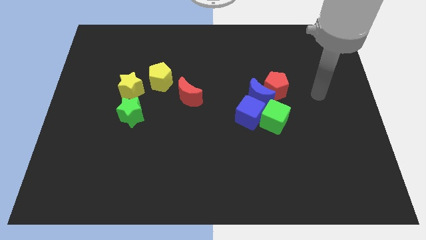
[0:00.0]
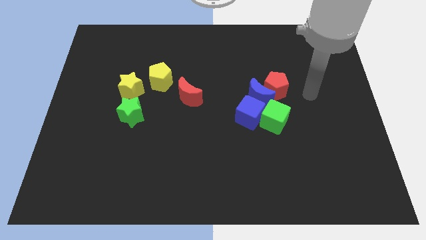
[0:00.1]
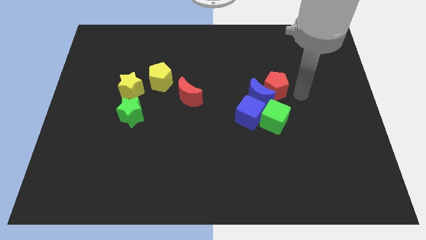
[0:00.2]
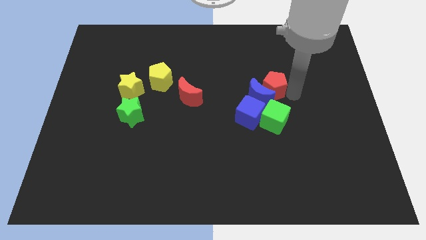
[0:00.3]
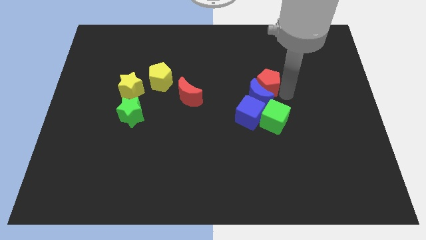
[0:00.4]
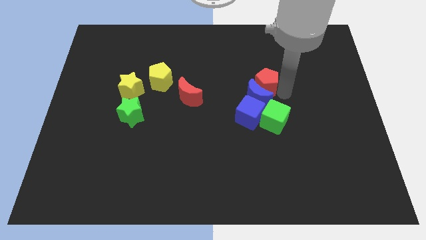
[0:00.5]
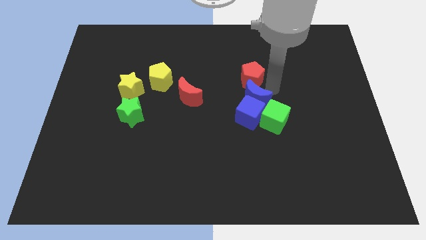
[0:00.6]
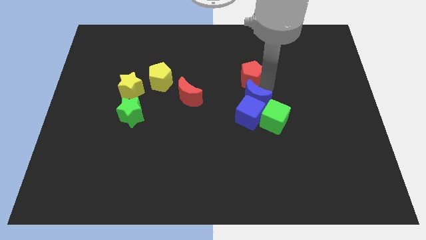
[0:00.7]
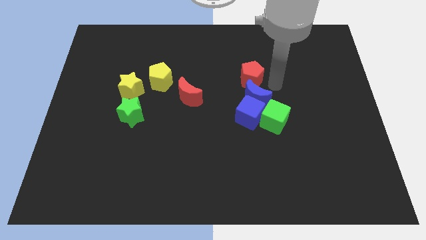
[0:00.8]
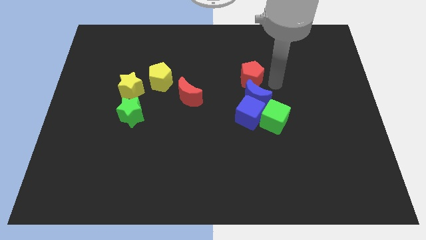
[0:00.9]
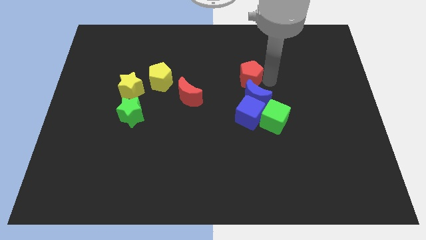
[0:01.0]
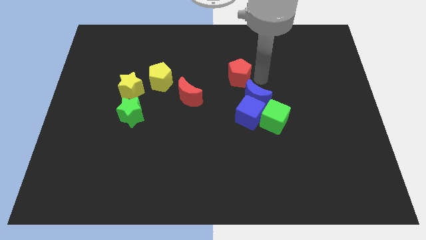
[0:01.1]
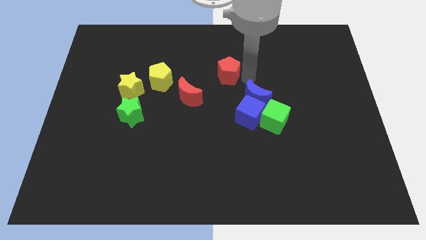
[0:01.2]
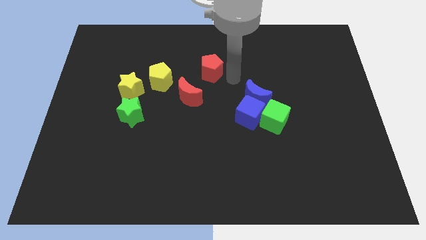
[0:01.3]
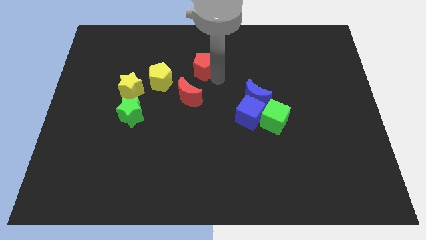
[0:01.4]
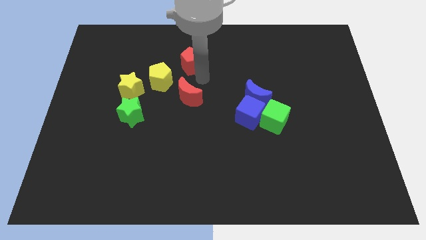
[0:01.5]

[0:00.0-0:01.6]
put the red pentagon above the red moon

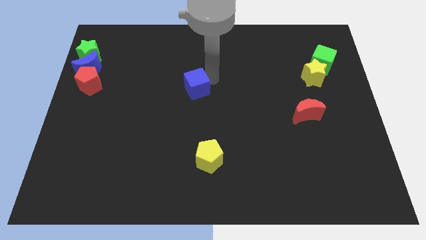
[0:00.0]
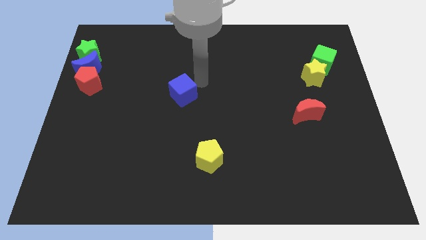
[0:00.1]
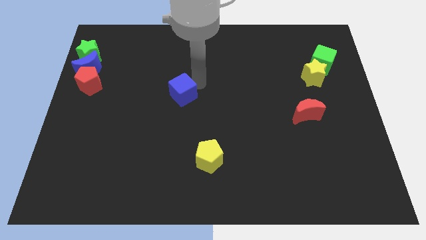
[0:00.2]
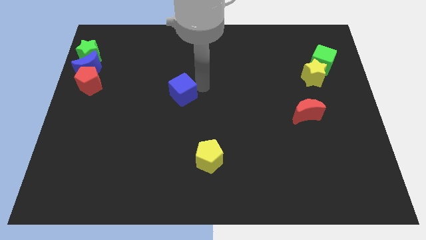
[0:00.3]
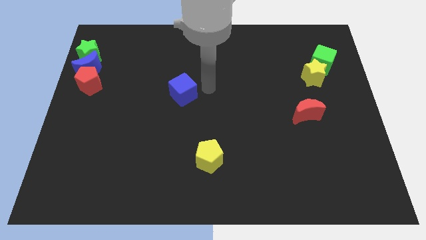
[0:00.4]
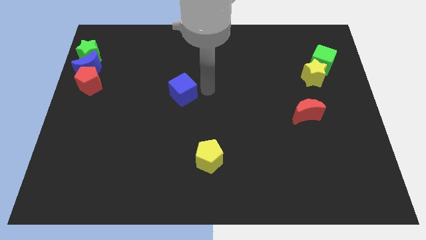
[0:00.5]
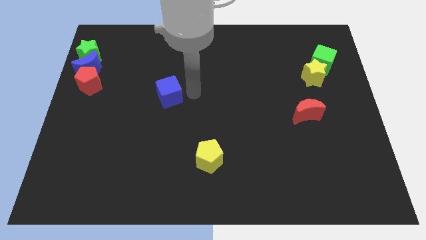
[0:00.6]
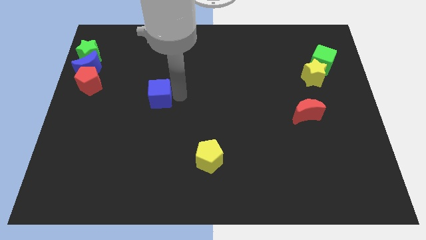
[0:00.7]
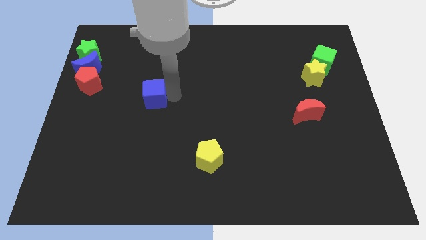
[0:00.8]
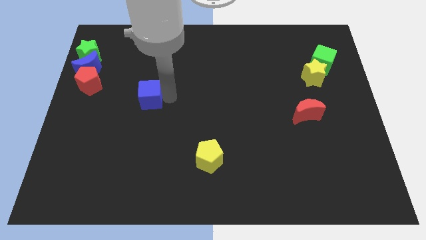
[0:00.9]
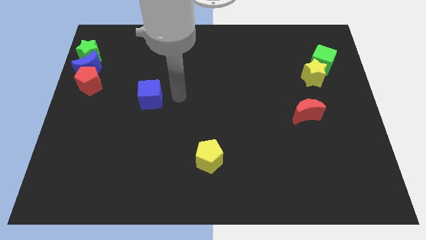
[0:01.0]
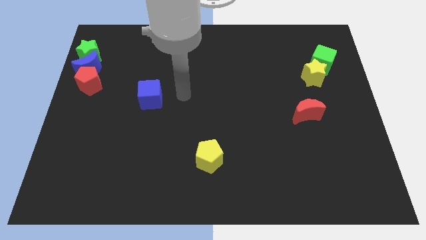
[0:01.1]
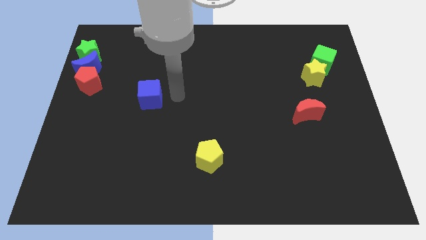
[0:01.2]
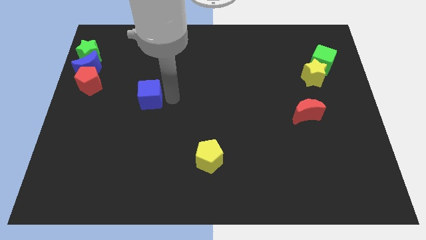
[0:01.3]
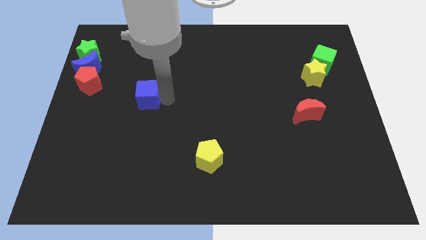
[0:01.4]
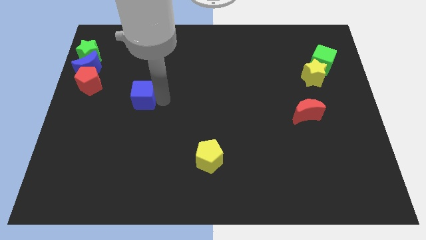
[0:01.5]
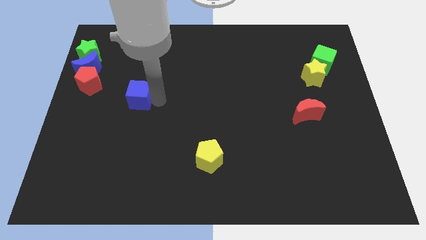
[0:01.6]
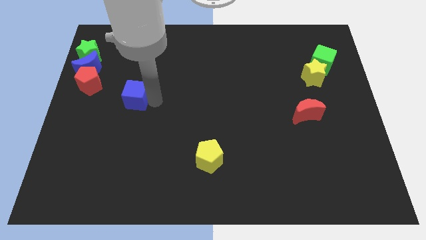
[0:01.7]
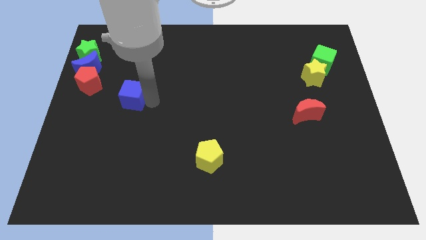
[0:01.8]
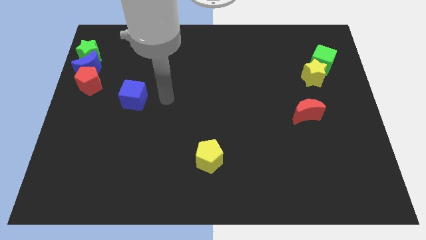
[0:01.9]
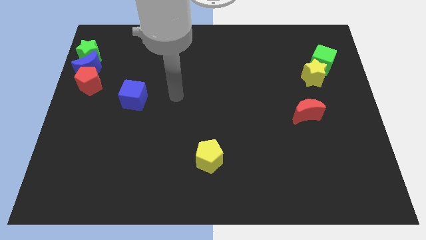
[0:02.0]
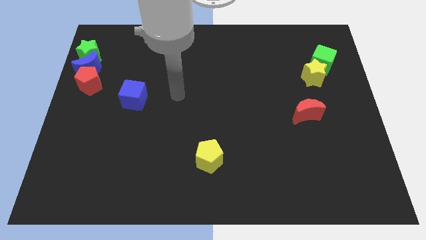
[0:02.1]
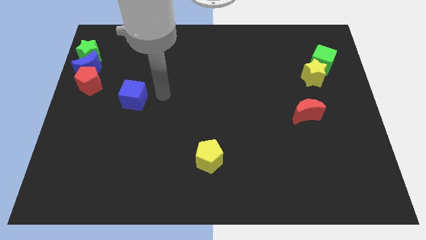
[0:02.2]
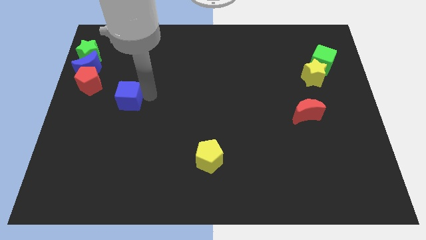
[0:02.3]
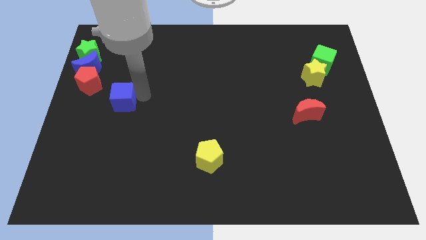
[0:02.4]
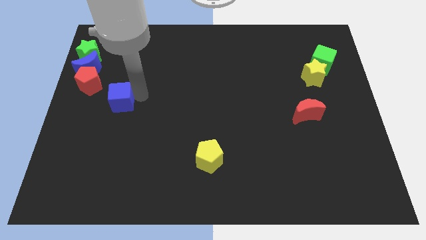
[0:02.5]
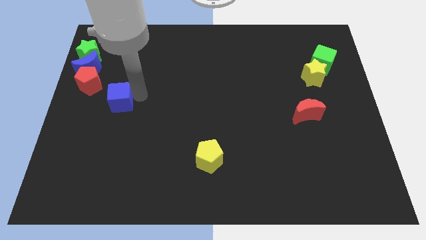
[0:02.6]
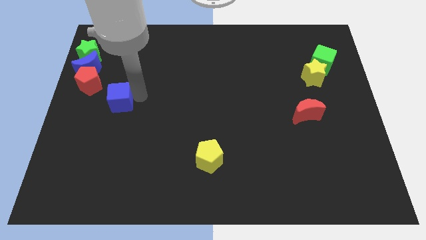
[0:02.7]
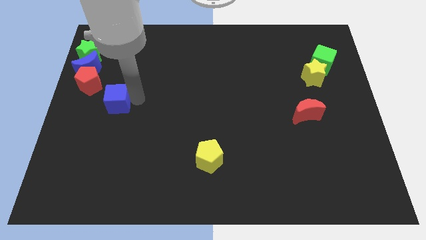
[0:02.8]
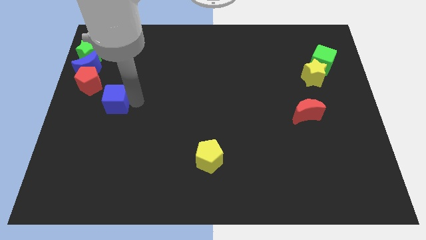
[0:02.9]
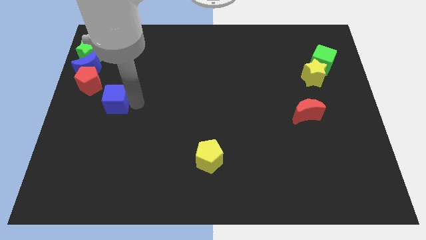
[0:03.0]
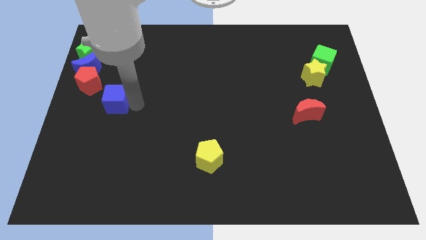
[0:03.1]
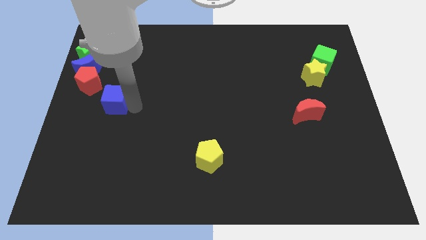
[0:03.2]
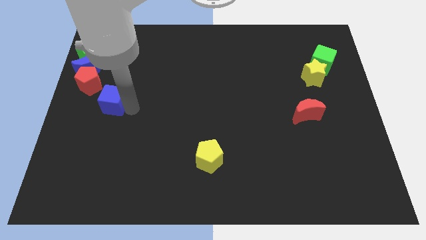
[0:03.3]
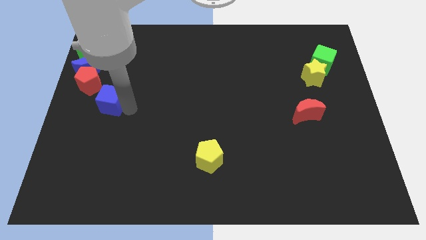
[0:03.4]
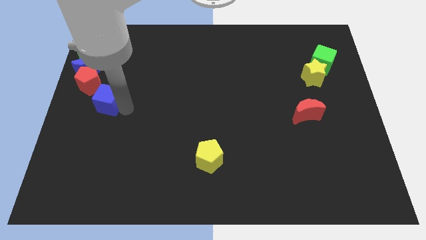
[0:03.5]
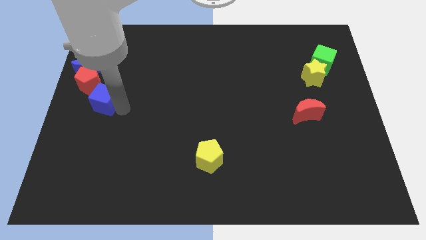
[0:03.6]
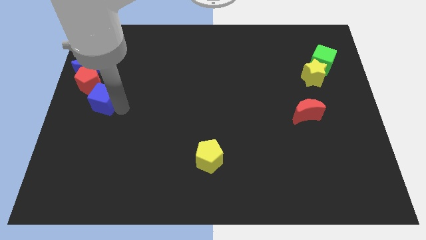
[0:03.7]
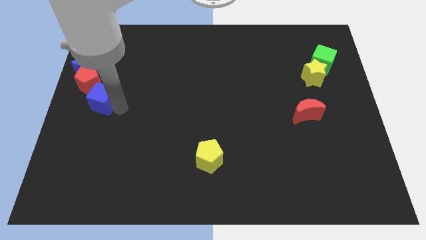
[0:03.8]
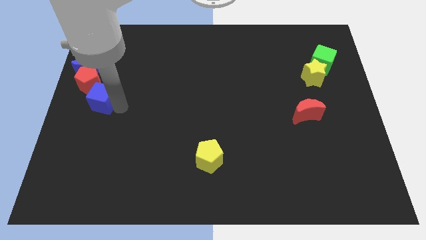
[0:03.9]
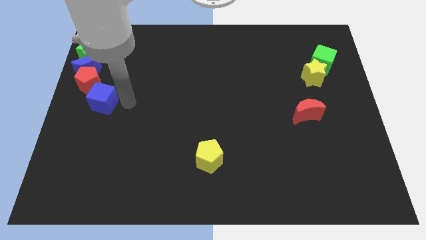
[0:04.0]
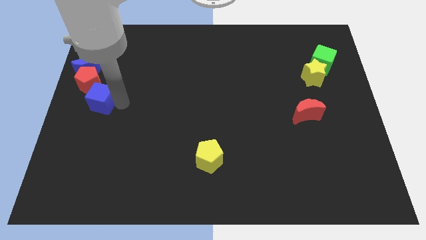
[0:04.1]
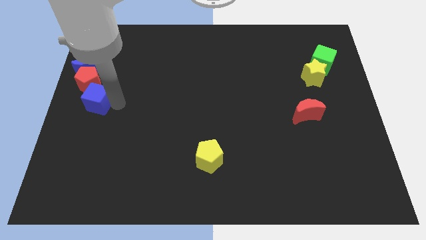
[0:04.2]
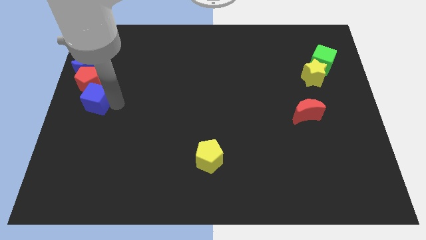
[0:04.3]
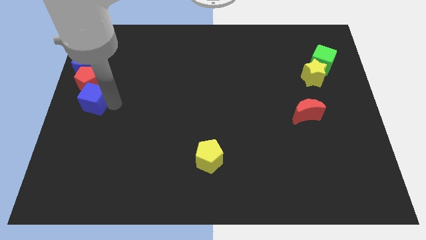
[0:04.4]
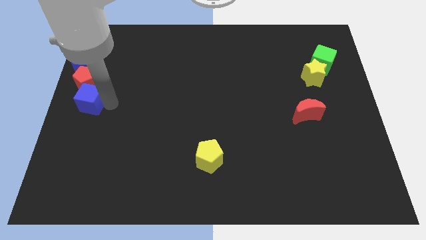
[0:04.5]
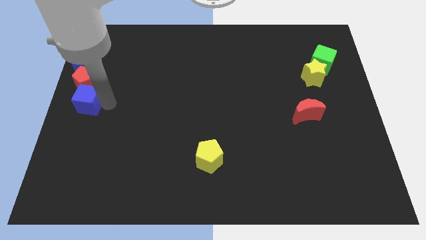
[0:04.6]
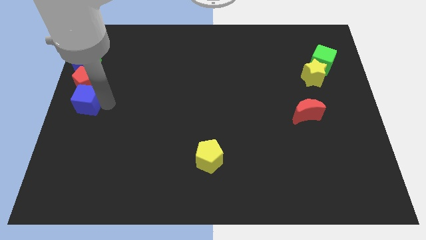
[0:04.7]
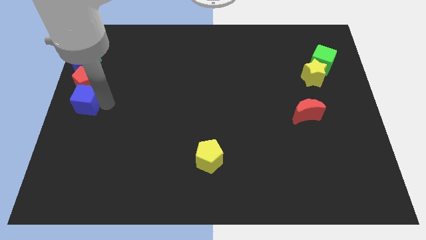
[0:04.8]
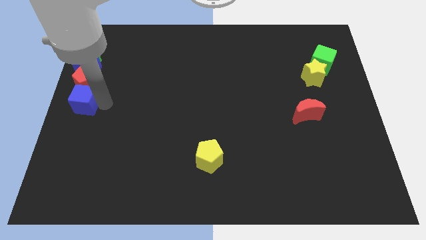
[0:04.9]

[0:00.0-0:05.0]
push the blue cube to the bottom of the red pentagon

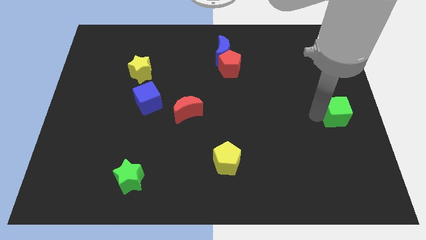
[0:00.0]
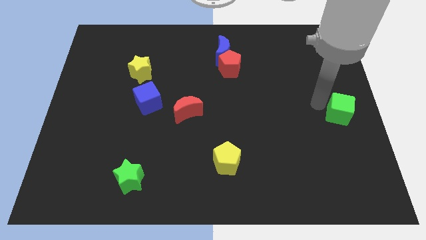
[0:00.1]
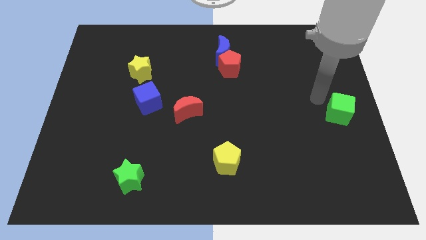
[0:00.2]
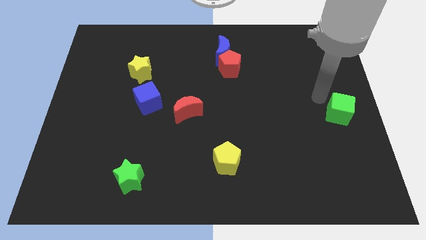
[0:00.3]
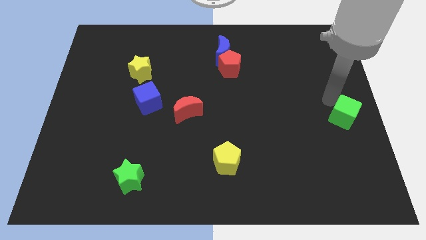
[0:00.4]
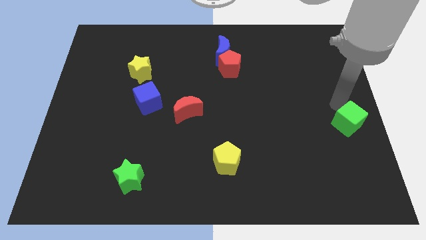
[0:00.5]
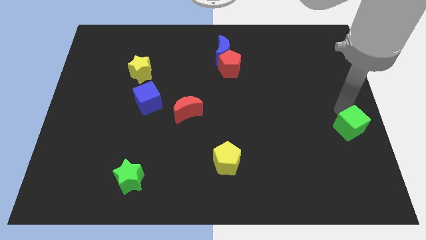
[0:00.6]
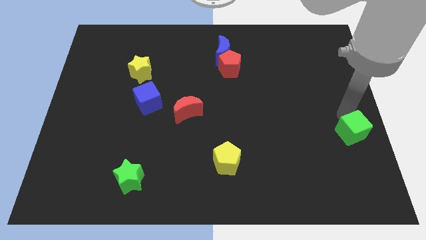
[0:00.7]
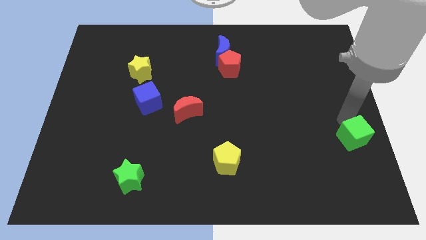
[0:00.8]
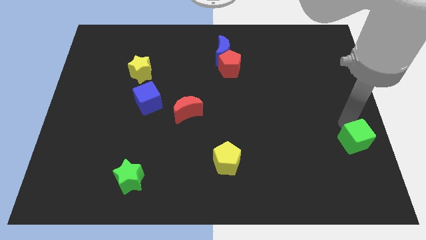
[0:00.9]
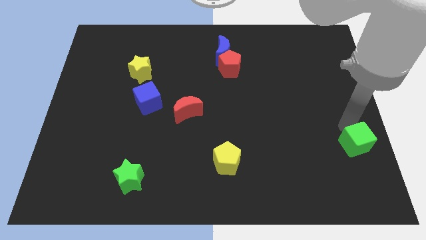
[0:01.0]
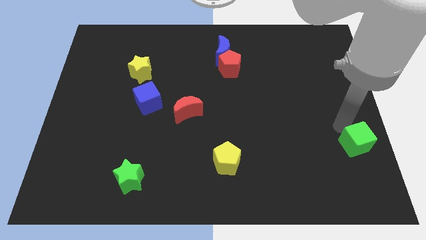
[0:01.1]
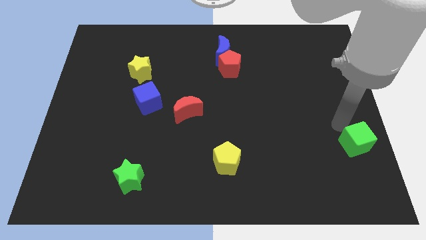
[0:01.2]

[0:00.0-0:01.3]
place the green cube right to the yellow pentagon

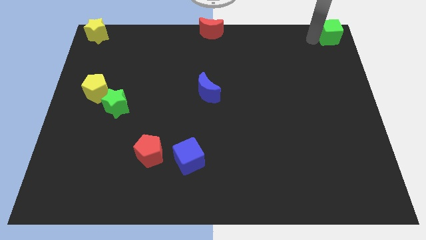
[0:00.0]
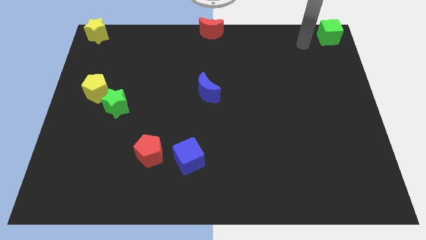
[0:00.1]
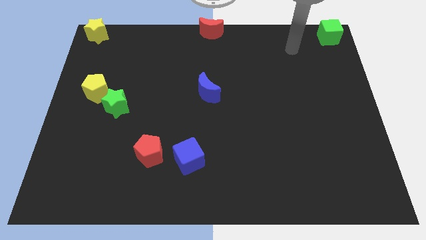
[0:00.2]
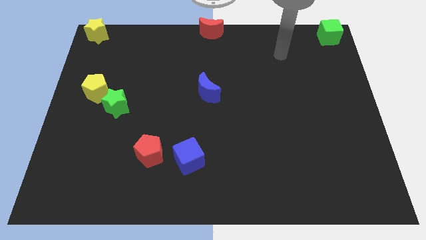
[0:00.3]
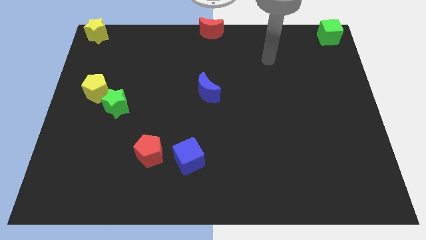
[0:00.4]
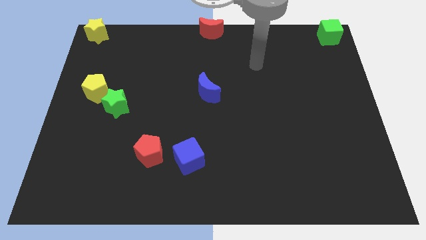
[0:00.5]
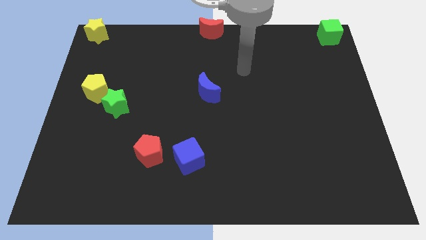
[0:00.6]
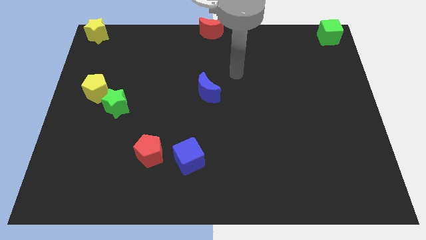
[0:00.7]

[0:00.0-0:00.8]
move the arm away from the green cube

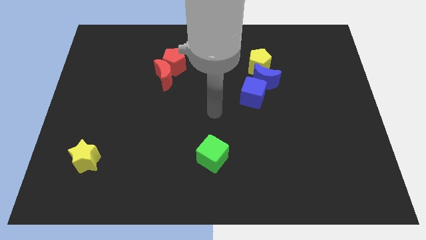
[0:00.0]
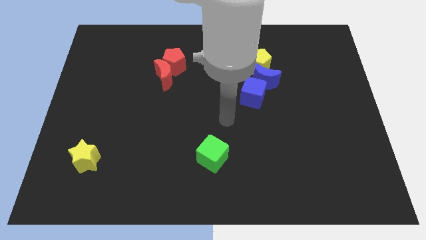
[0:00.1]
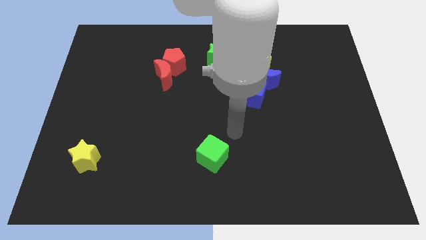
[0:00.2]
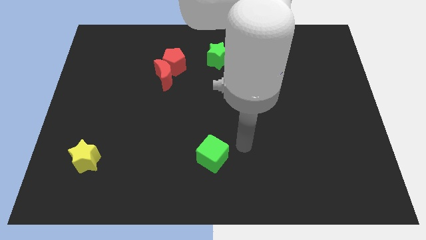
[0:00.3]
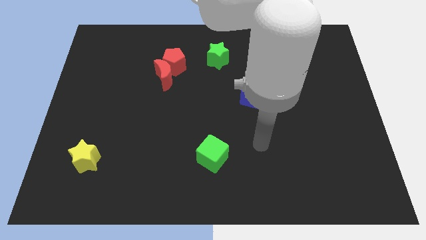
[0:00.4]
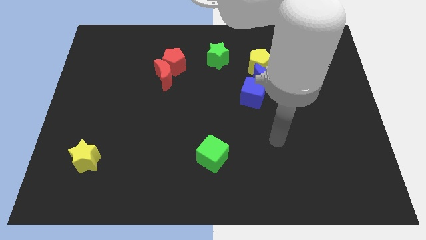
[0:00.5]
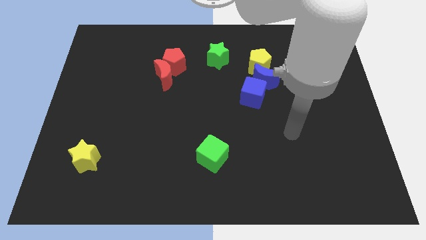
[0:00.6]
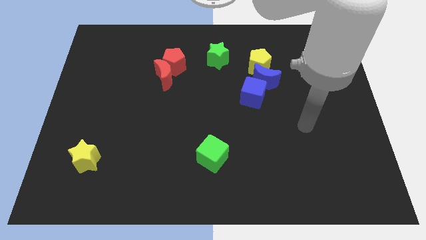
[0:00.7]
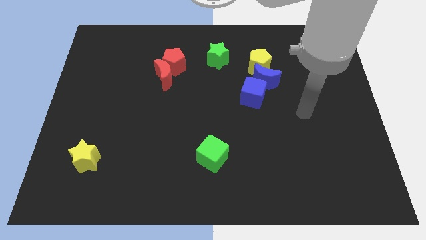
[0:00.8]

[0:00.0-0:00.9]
move your arm towards the right side of the board
